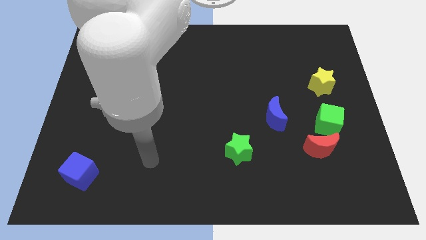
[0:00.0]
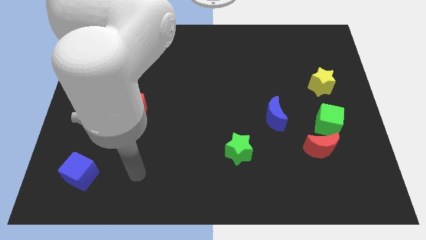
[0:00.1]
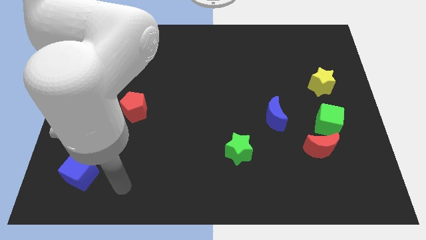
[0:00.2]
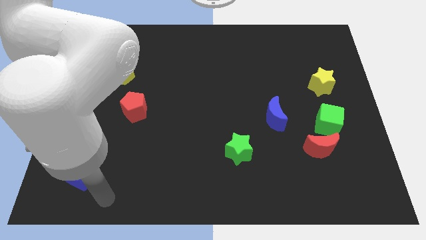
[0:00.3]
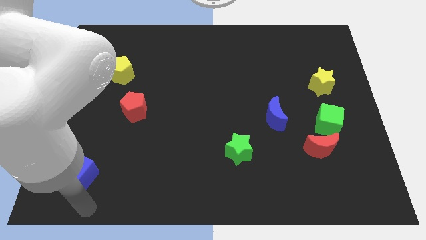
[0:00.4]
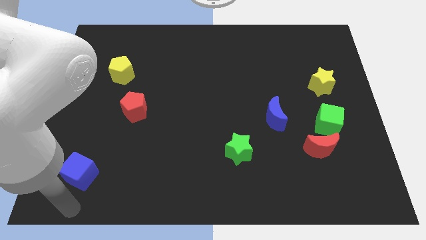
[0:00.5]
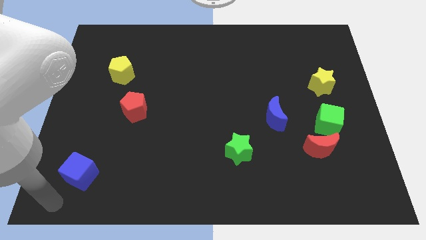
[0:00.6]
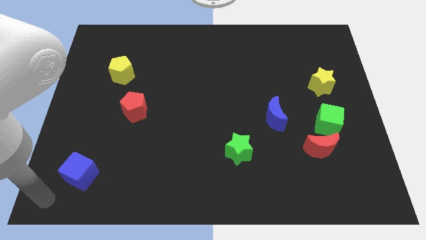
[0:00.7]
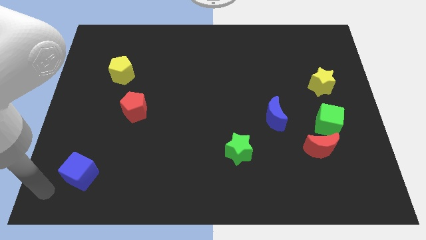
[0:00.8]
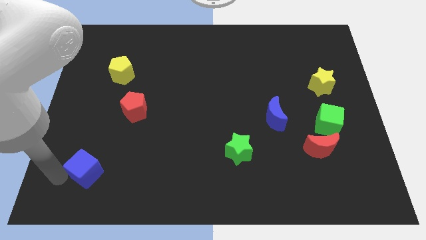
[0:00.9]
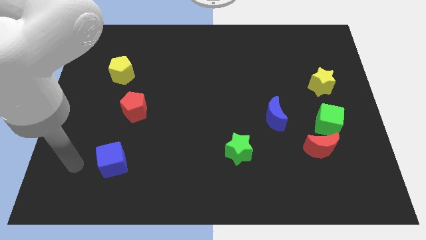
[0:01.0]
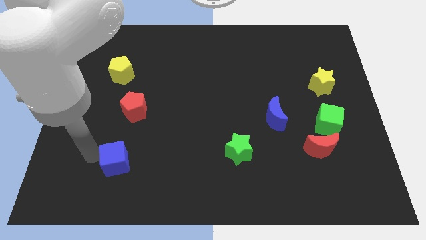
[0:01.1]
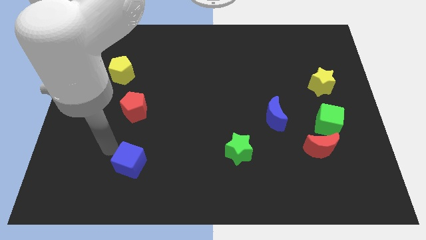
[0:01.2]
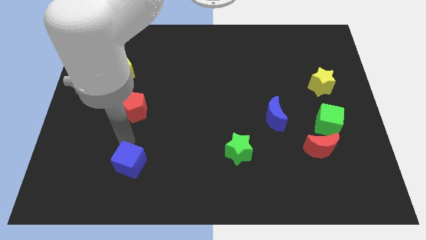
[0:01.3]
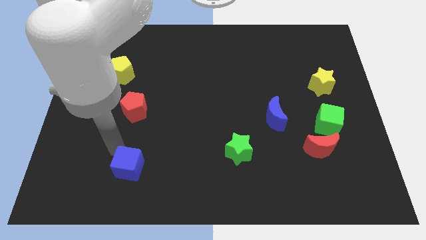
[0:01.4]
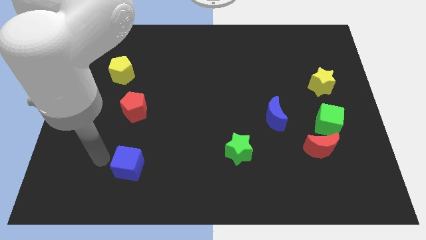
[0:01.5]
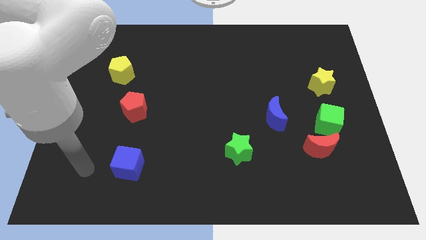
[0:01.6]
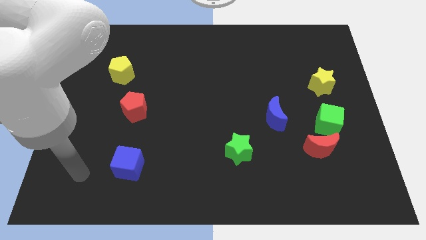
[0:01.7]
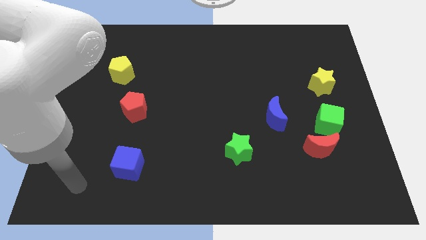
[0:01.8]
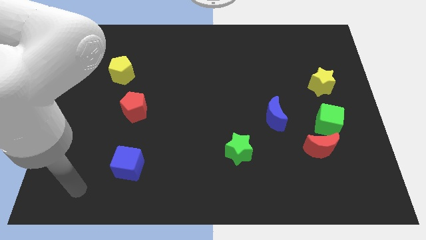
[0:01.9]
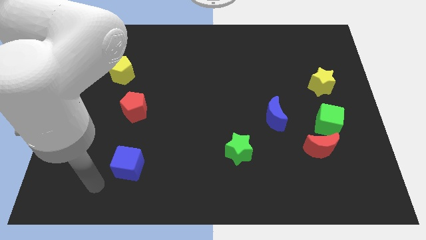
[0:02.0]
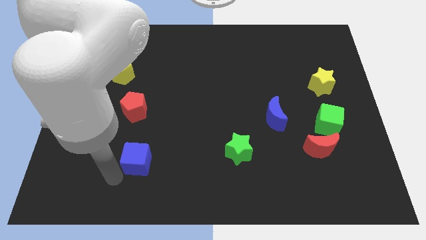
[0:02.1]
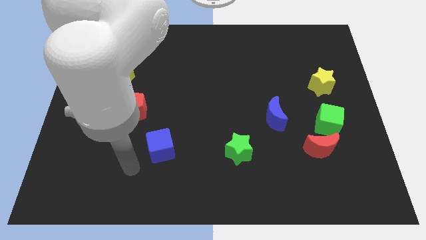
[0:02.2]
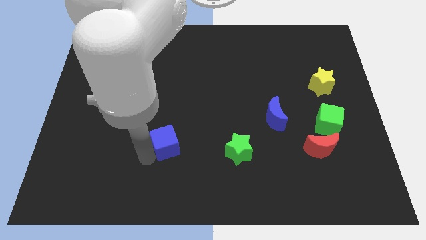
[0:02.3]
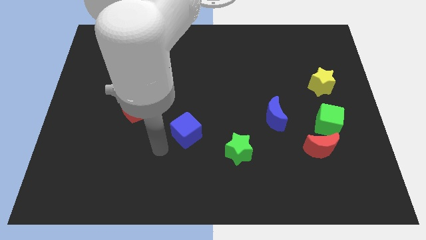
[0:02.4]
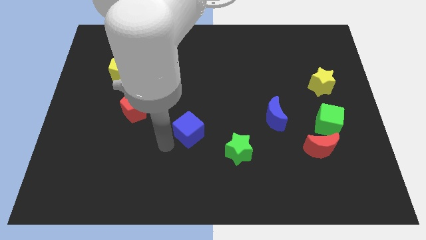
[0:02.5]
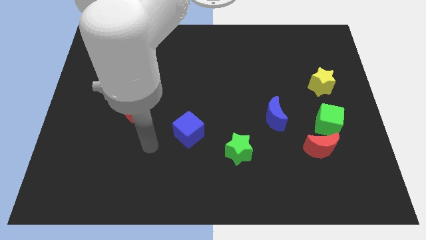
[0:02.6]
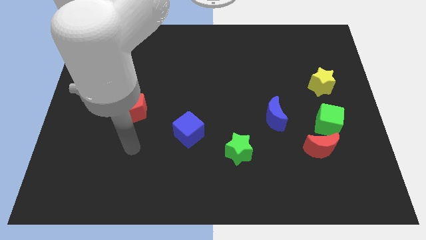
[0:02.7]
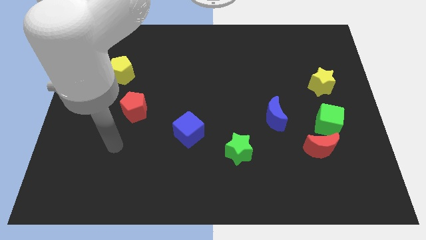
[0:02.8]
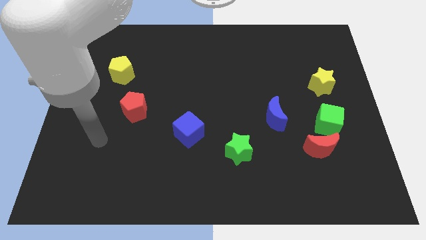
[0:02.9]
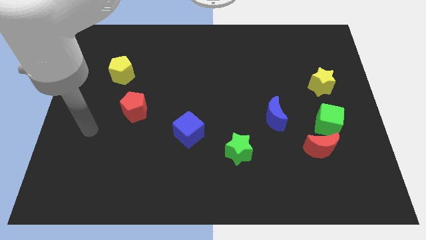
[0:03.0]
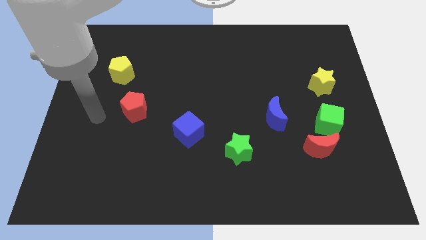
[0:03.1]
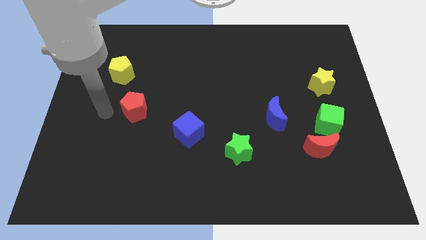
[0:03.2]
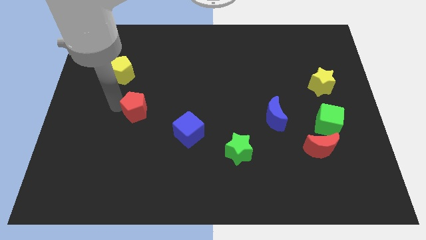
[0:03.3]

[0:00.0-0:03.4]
place the blue cube bottom right diagonal to red pentagon

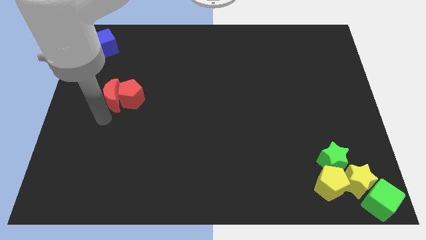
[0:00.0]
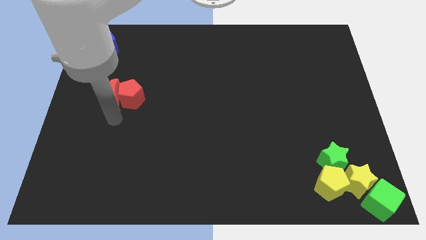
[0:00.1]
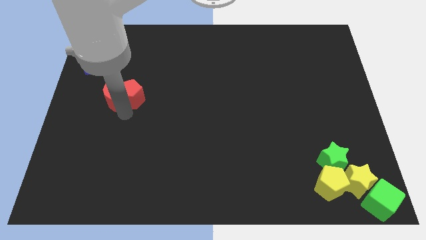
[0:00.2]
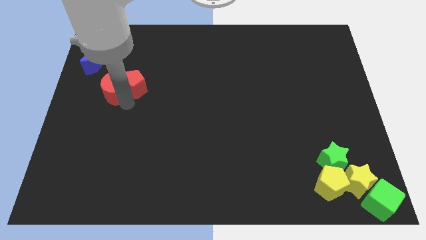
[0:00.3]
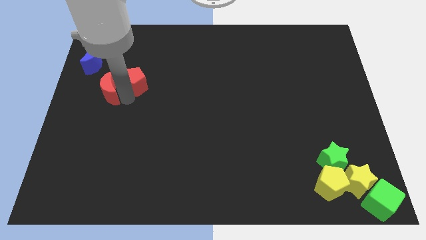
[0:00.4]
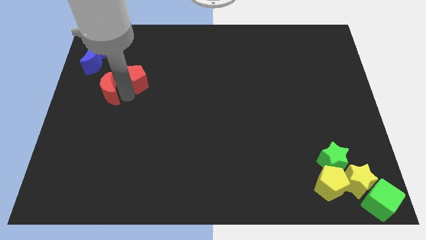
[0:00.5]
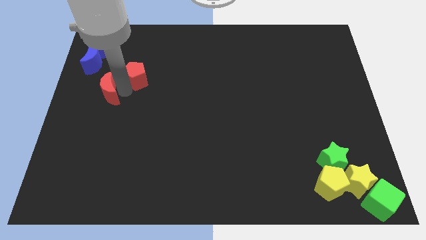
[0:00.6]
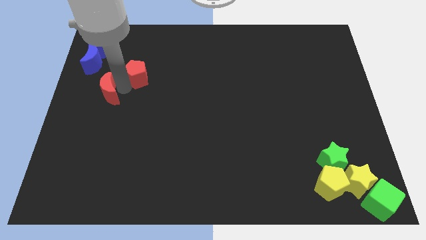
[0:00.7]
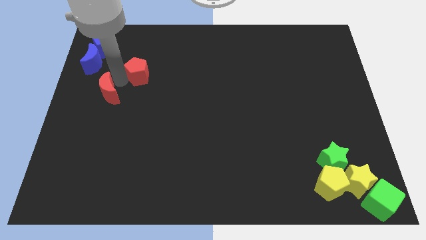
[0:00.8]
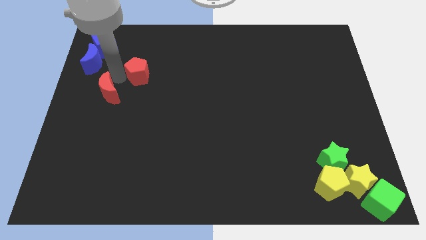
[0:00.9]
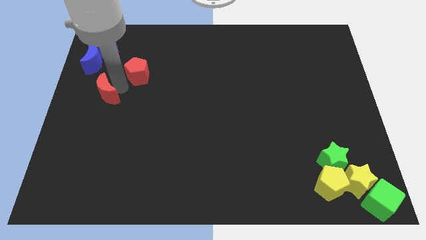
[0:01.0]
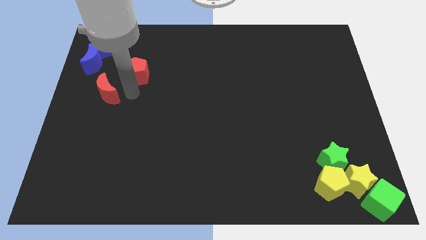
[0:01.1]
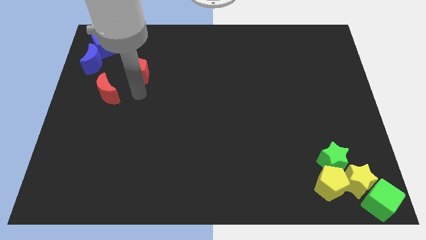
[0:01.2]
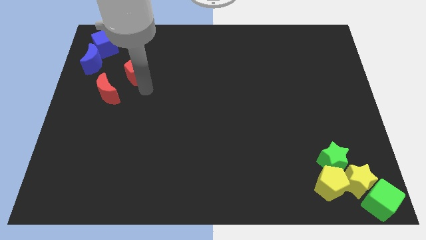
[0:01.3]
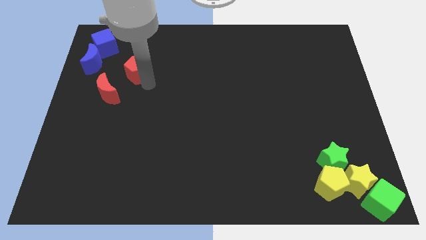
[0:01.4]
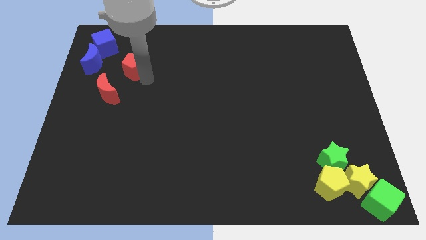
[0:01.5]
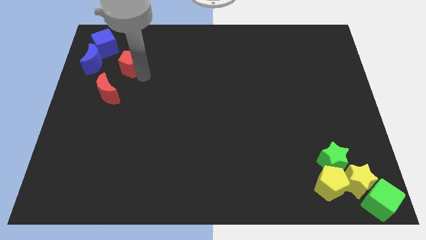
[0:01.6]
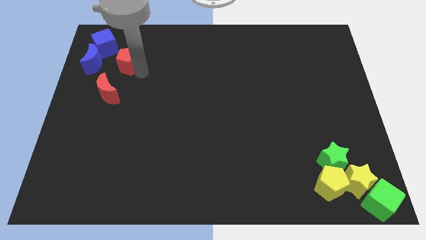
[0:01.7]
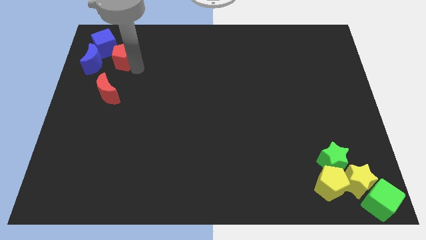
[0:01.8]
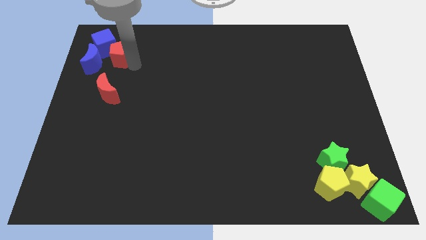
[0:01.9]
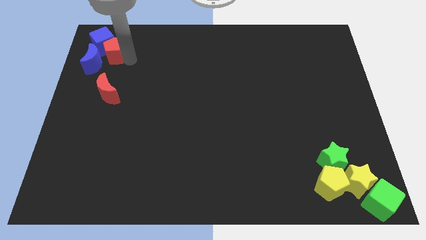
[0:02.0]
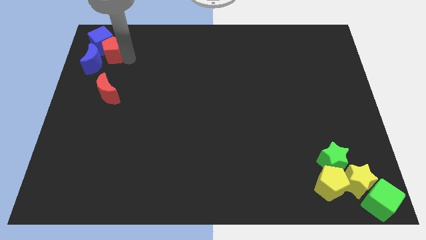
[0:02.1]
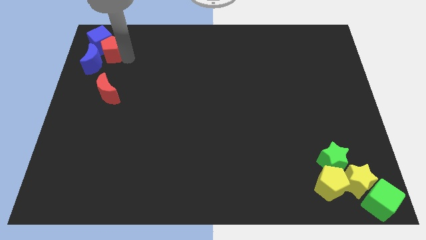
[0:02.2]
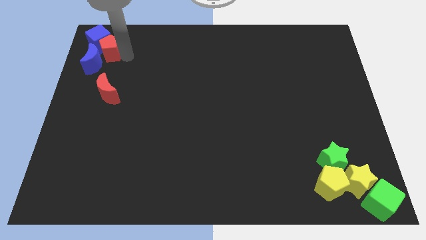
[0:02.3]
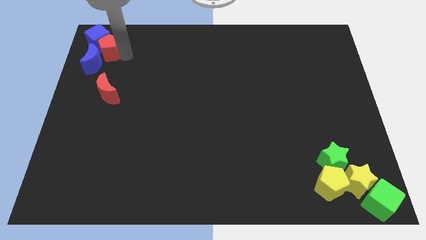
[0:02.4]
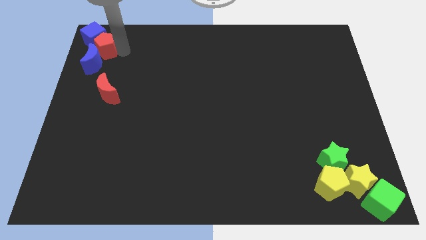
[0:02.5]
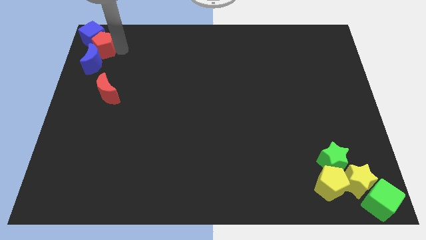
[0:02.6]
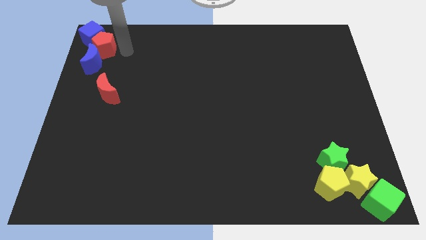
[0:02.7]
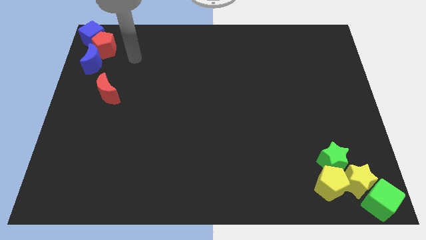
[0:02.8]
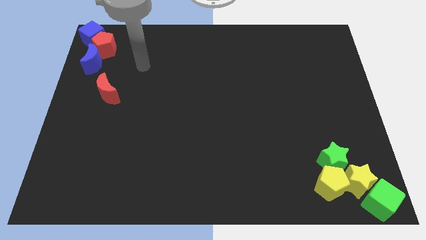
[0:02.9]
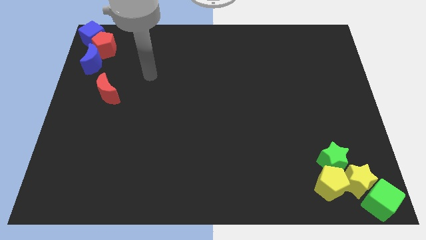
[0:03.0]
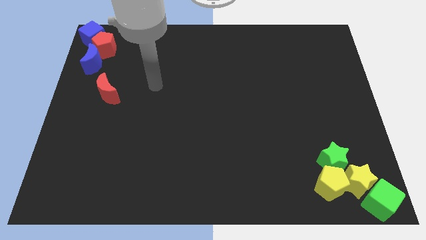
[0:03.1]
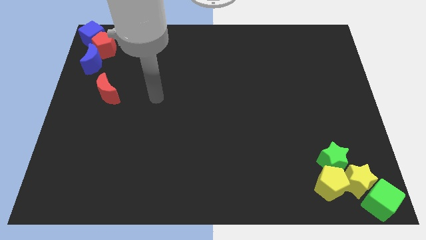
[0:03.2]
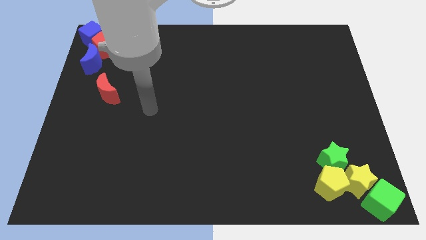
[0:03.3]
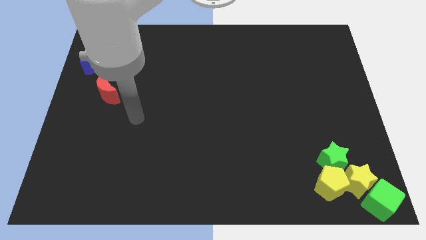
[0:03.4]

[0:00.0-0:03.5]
push the red pentagon to the right of the blue cube

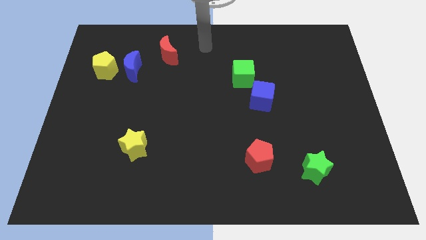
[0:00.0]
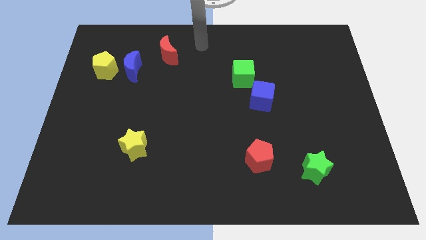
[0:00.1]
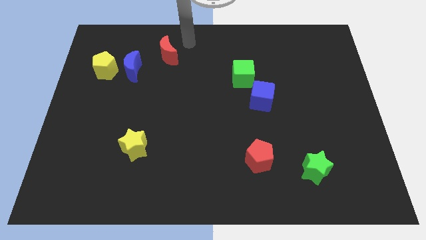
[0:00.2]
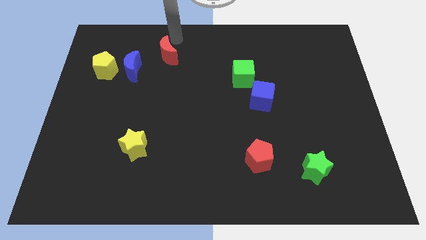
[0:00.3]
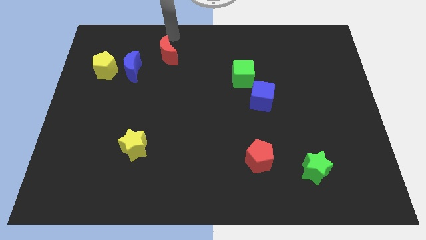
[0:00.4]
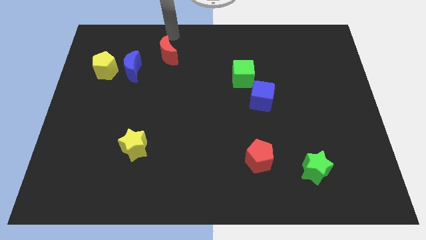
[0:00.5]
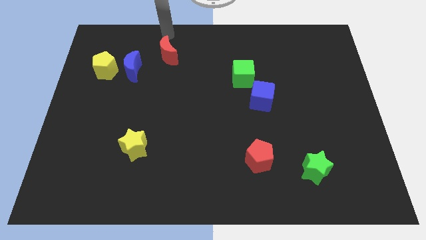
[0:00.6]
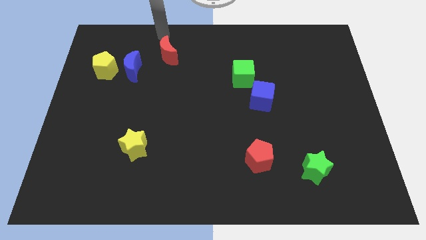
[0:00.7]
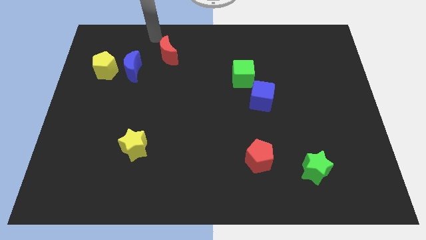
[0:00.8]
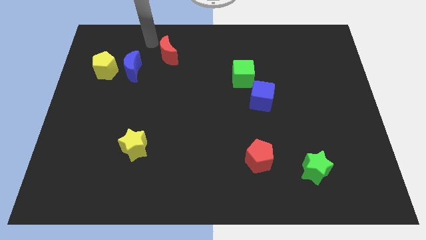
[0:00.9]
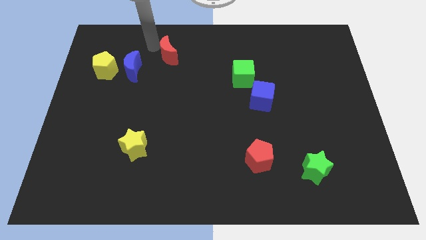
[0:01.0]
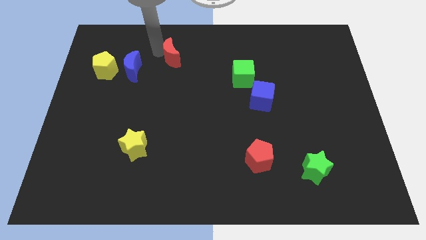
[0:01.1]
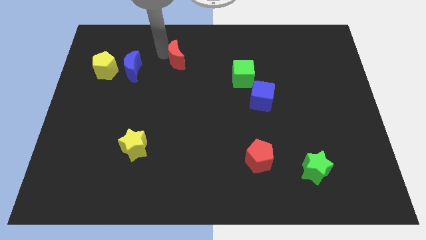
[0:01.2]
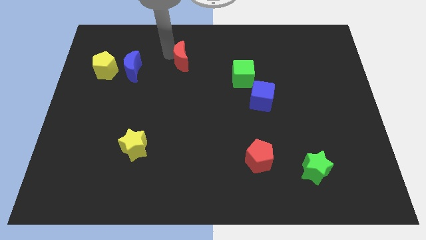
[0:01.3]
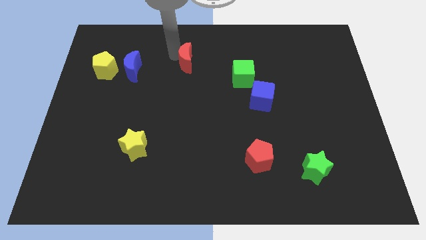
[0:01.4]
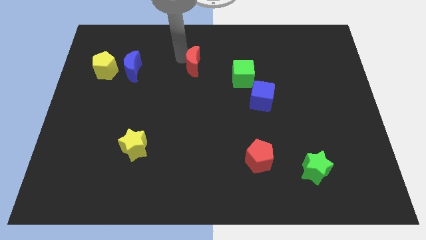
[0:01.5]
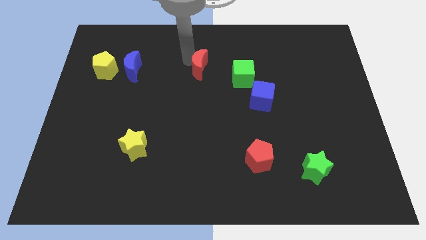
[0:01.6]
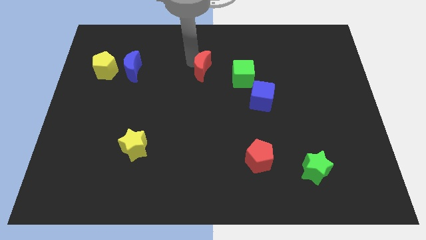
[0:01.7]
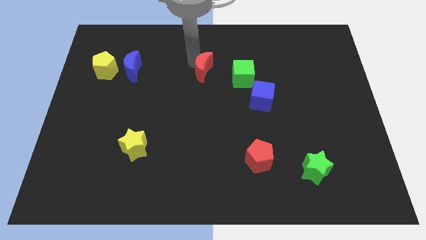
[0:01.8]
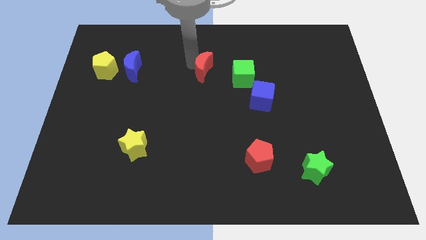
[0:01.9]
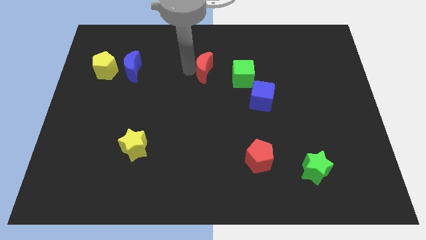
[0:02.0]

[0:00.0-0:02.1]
place the red moon right to the blue moon
